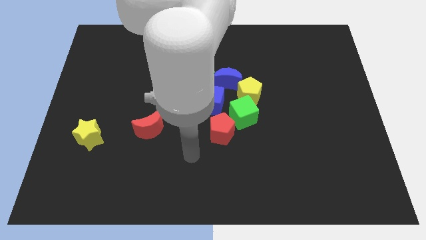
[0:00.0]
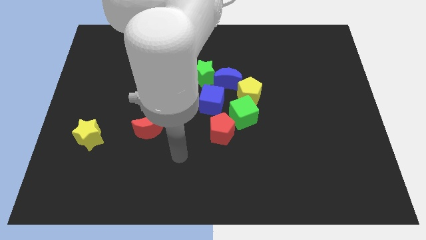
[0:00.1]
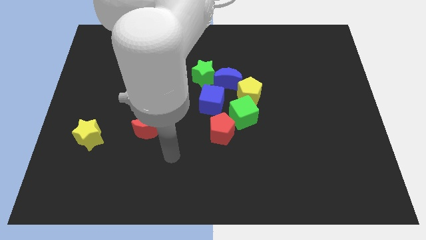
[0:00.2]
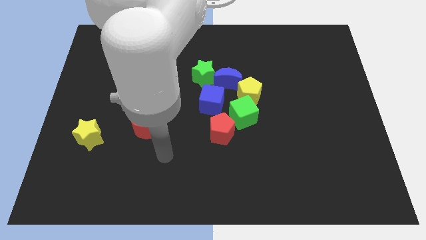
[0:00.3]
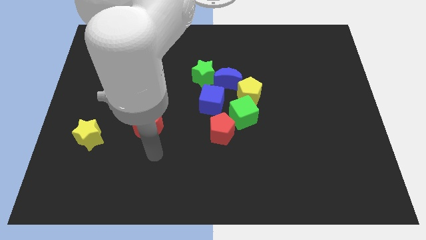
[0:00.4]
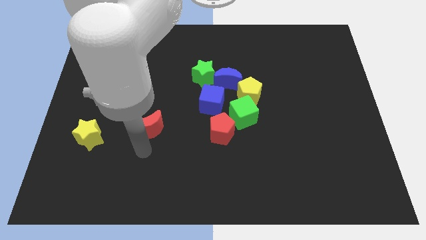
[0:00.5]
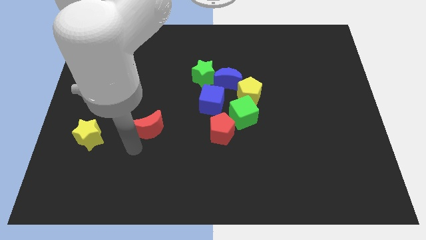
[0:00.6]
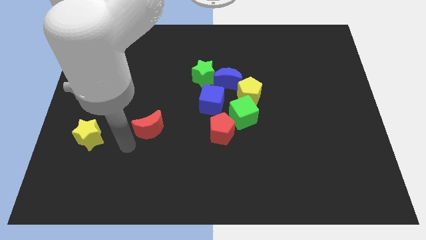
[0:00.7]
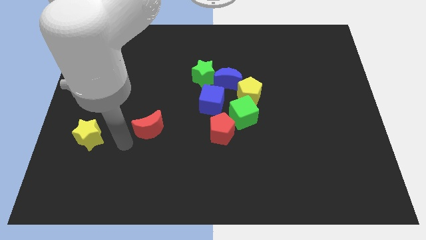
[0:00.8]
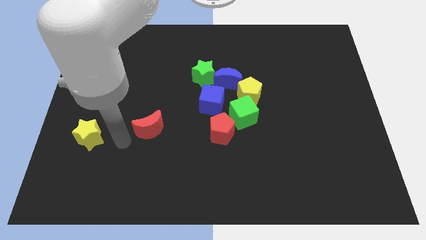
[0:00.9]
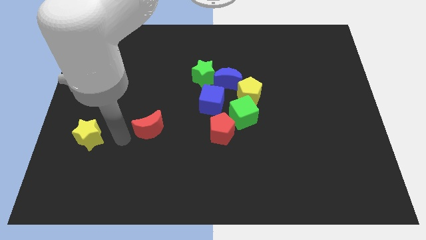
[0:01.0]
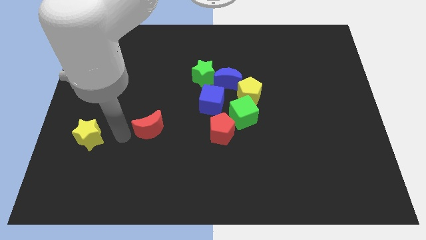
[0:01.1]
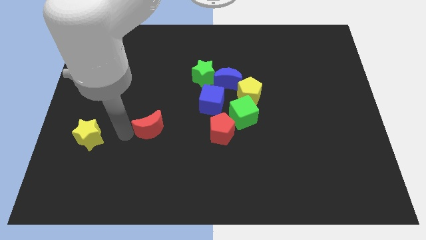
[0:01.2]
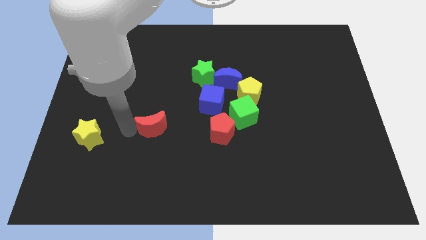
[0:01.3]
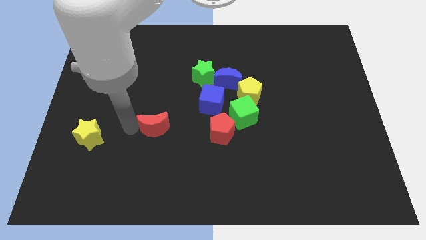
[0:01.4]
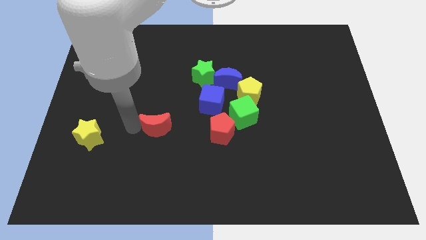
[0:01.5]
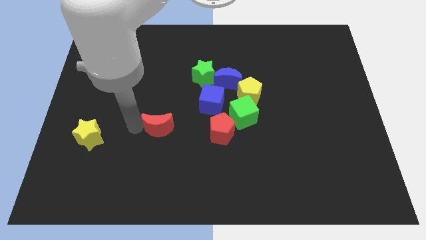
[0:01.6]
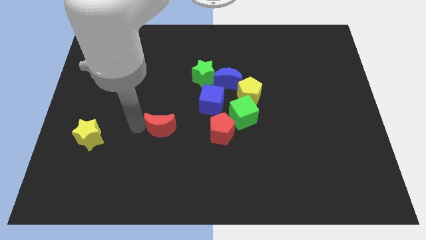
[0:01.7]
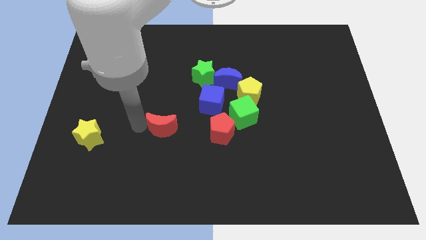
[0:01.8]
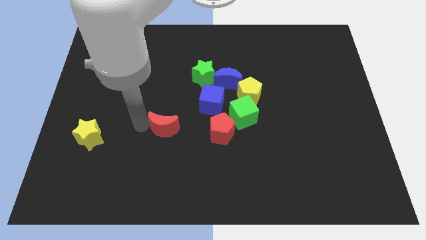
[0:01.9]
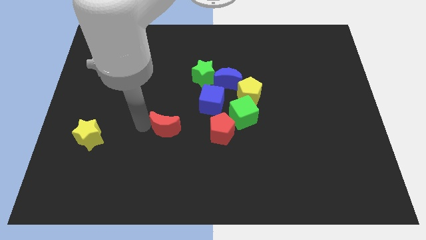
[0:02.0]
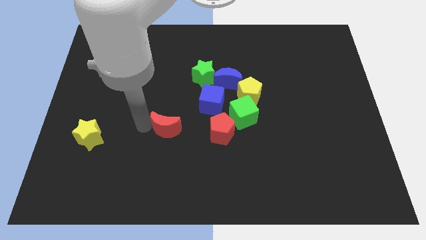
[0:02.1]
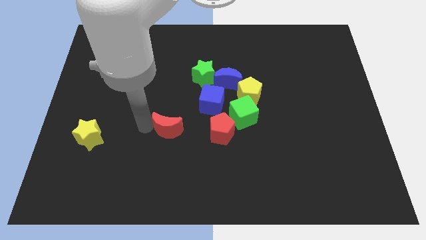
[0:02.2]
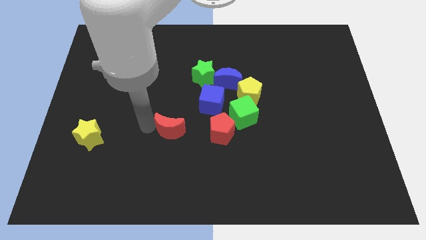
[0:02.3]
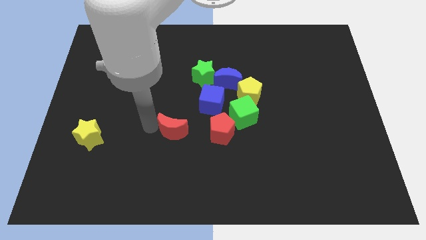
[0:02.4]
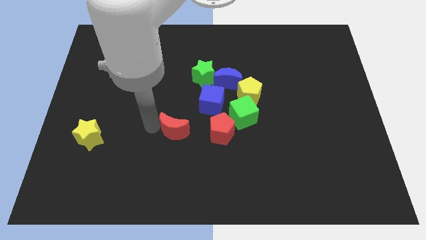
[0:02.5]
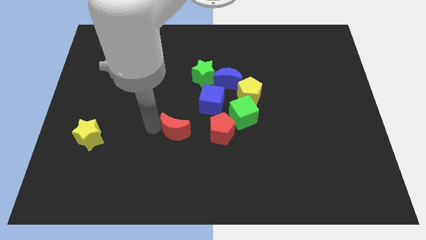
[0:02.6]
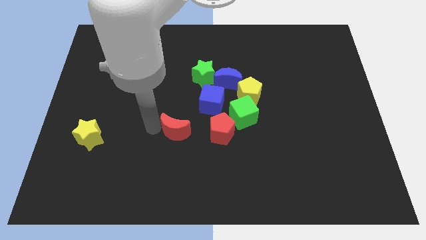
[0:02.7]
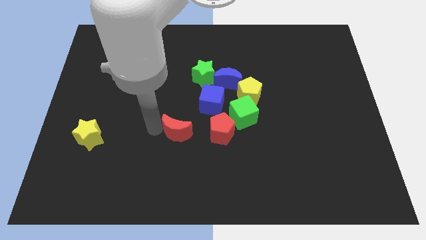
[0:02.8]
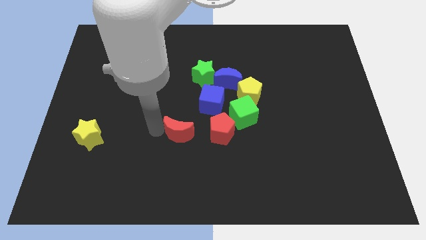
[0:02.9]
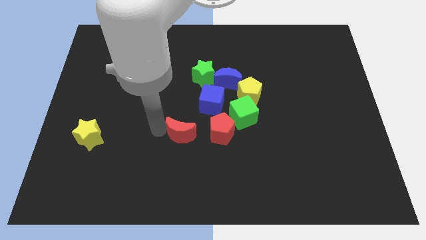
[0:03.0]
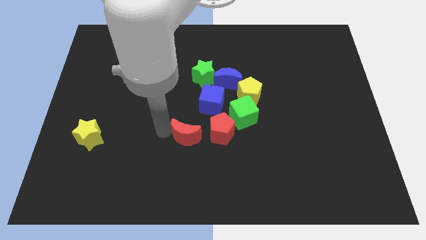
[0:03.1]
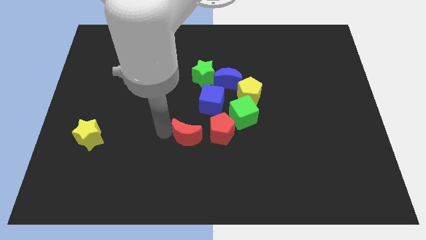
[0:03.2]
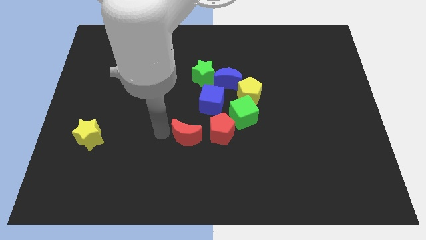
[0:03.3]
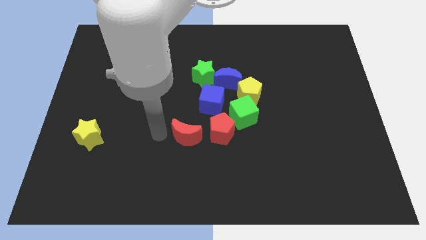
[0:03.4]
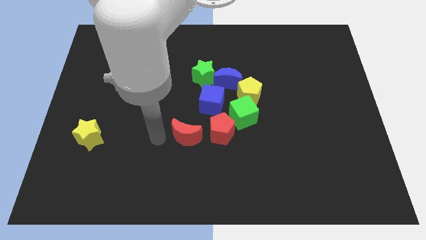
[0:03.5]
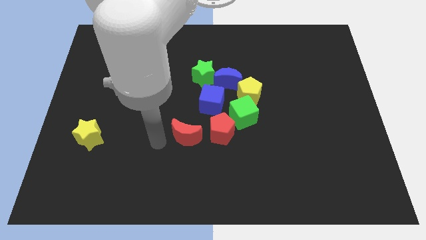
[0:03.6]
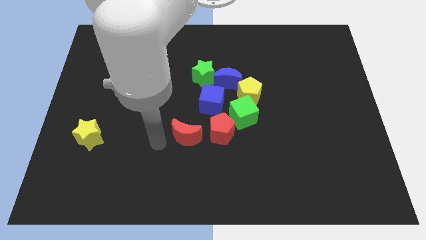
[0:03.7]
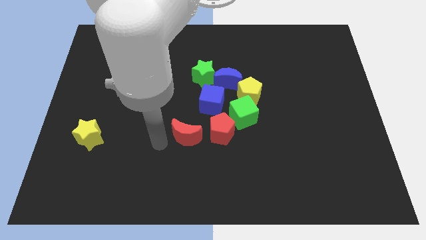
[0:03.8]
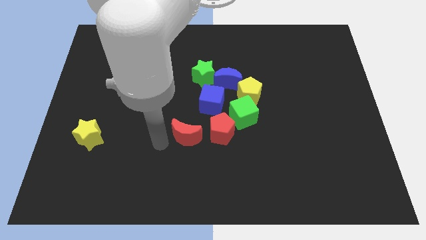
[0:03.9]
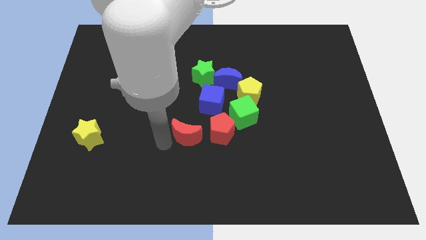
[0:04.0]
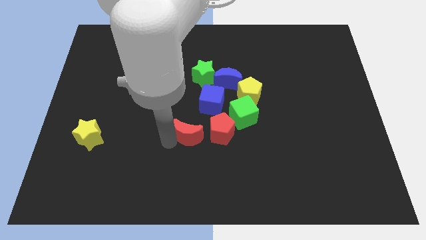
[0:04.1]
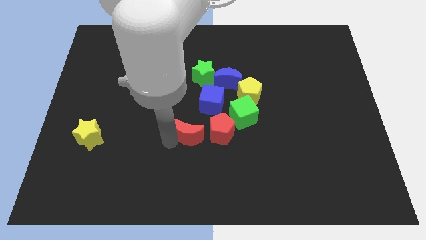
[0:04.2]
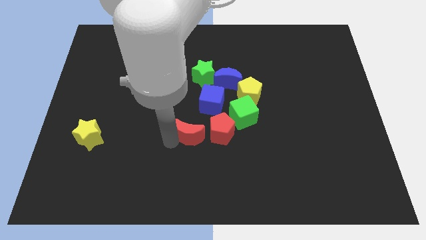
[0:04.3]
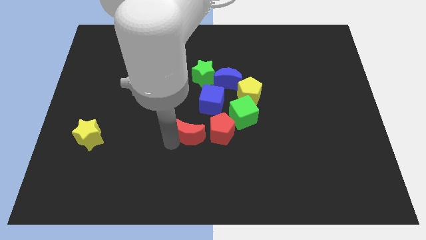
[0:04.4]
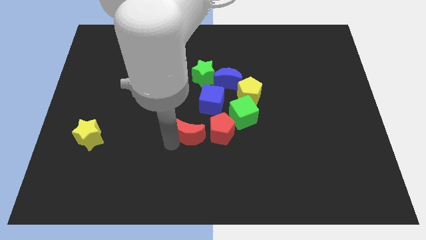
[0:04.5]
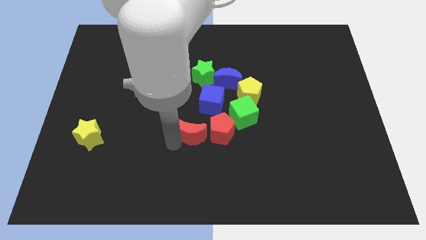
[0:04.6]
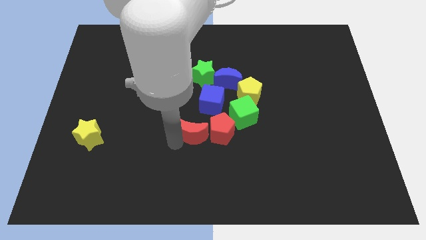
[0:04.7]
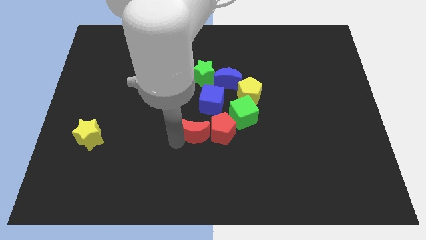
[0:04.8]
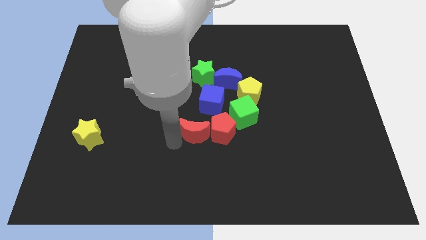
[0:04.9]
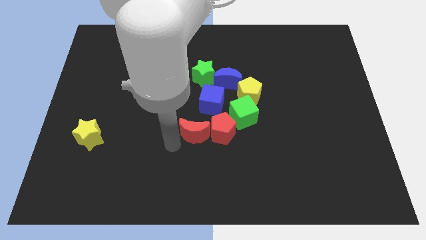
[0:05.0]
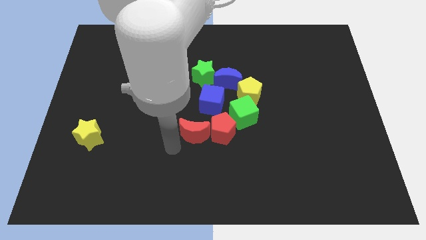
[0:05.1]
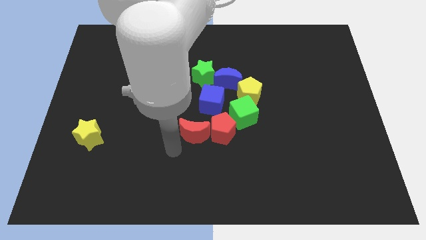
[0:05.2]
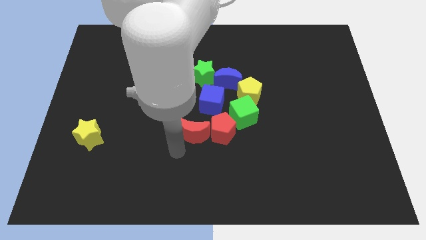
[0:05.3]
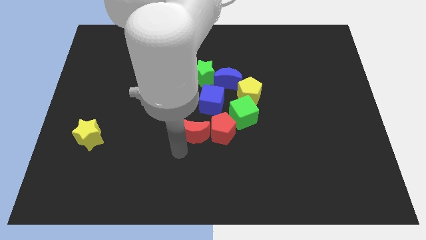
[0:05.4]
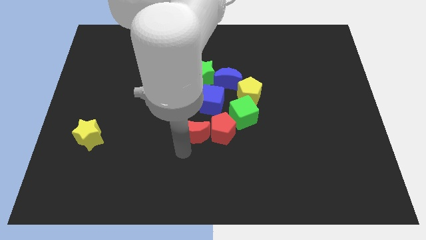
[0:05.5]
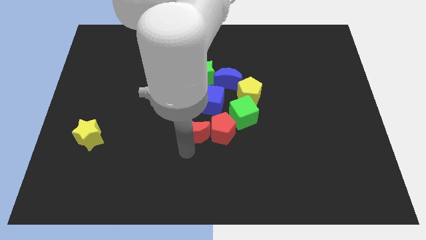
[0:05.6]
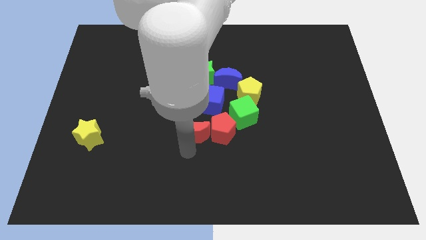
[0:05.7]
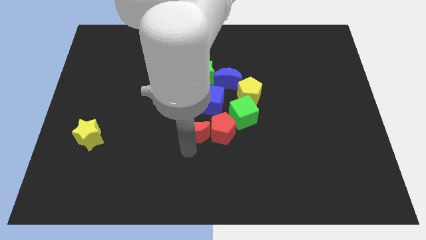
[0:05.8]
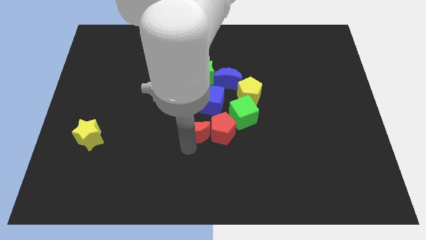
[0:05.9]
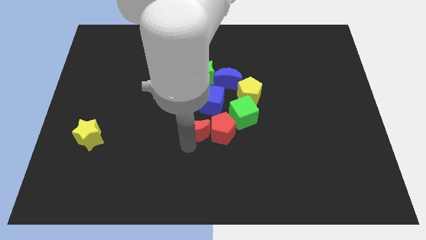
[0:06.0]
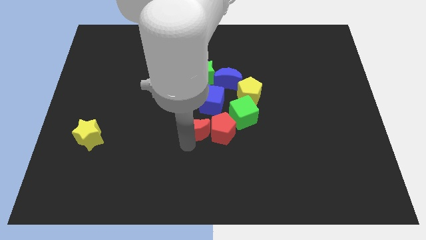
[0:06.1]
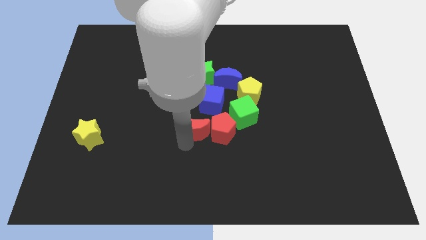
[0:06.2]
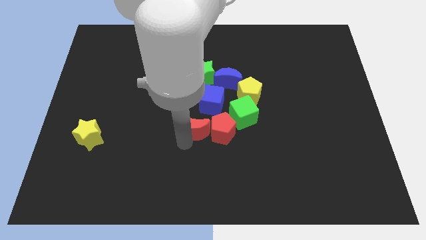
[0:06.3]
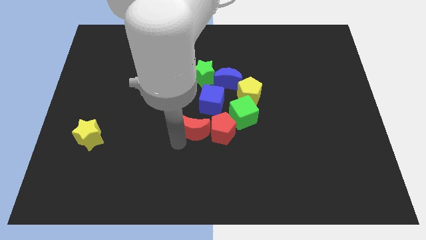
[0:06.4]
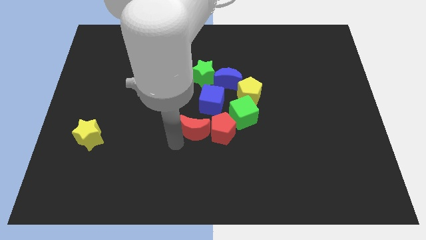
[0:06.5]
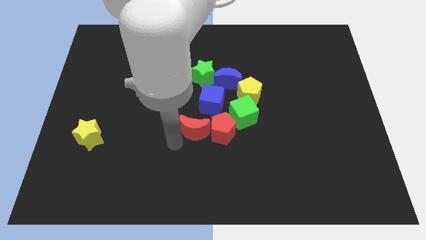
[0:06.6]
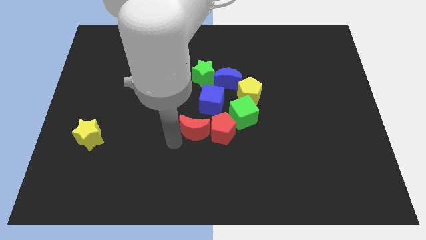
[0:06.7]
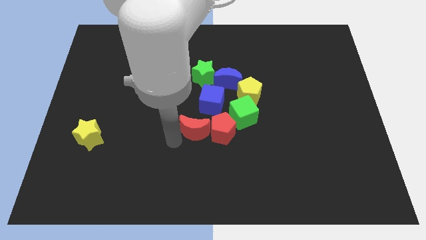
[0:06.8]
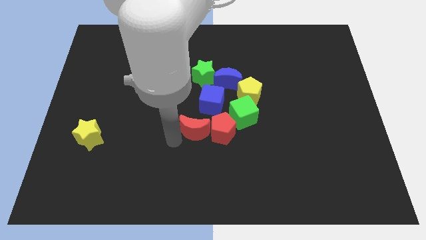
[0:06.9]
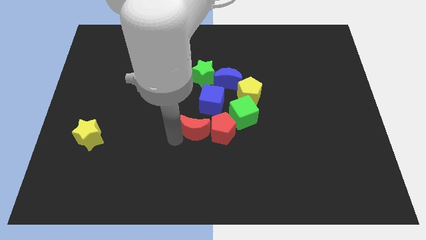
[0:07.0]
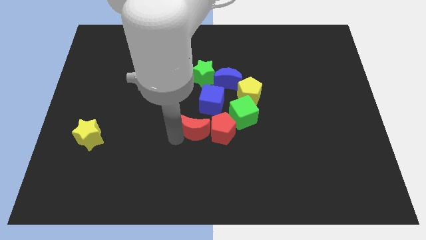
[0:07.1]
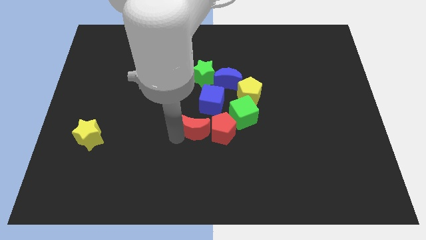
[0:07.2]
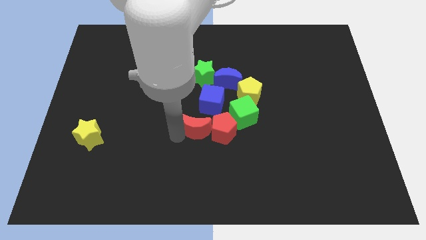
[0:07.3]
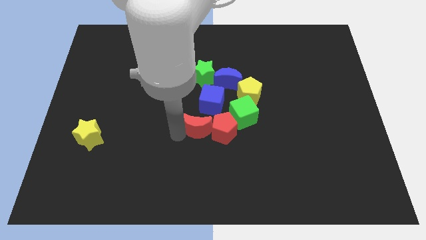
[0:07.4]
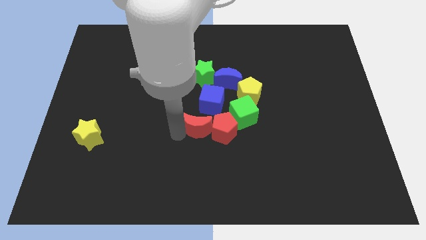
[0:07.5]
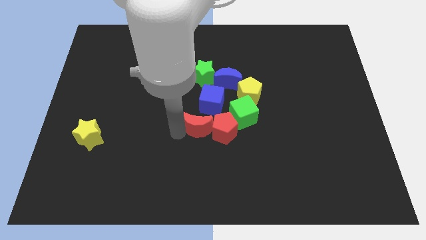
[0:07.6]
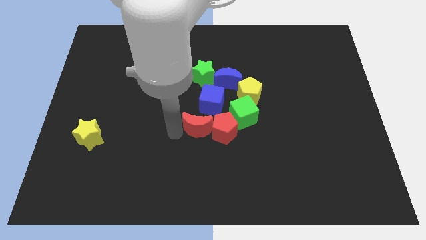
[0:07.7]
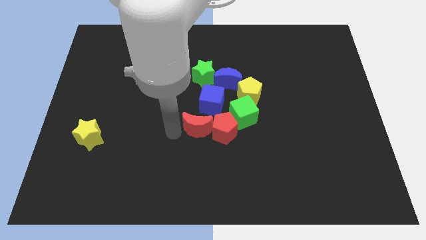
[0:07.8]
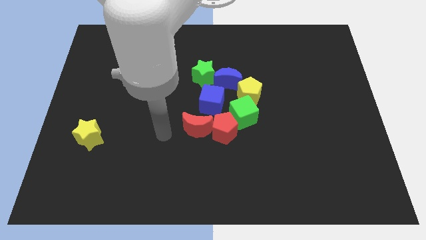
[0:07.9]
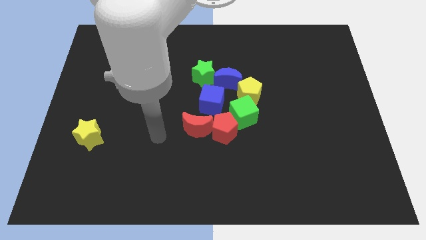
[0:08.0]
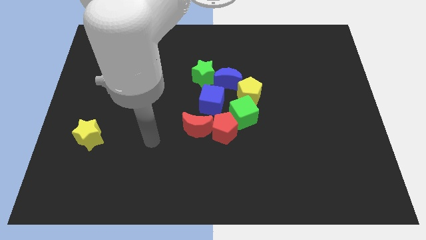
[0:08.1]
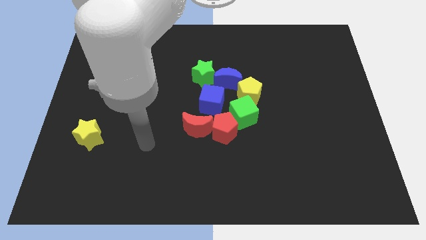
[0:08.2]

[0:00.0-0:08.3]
push the red crescent into the red pentagon

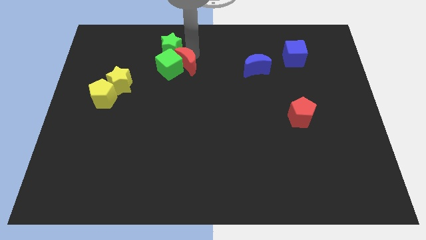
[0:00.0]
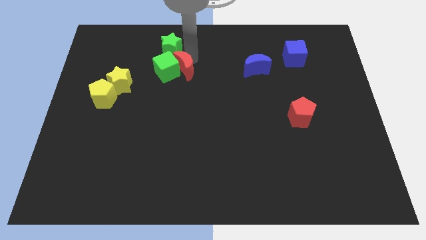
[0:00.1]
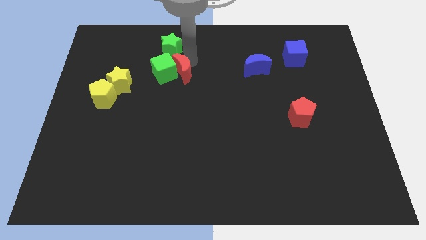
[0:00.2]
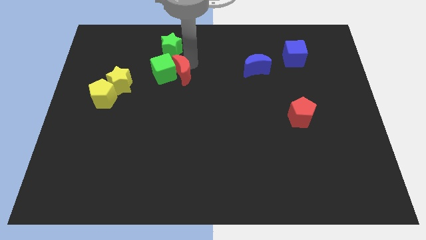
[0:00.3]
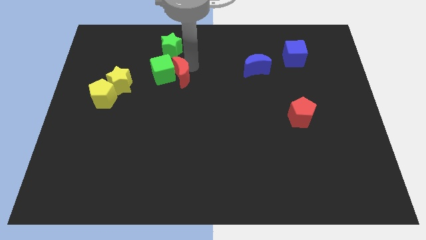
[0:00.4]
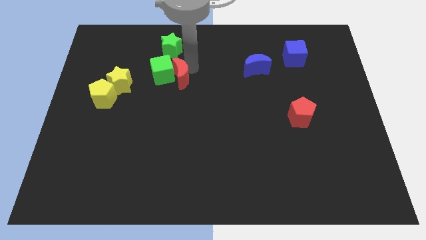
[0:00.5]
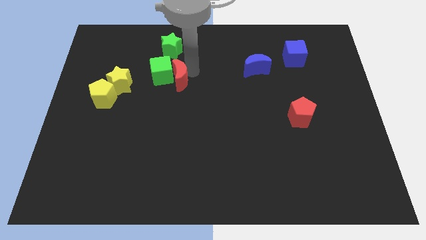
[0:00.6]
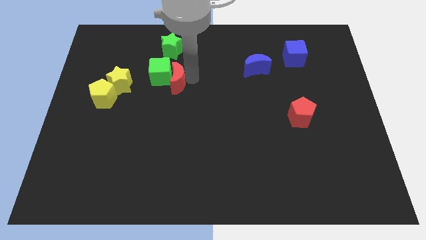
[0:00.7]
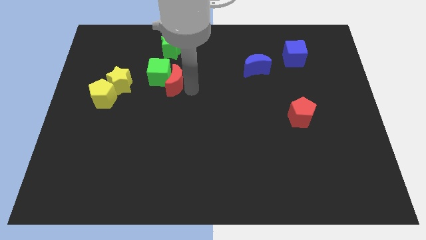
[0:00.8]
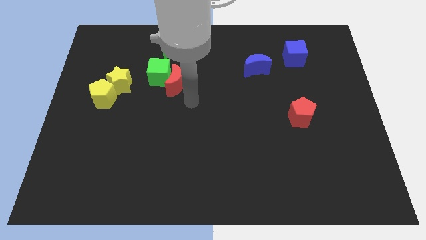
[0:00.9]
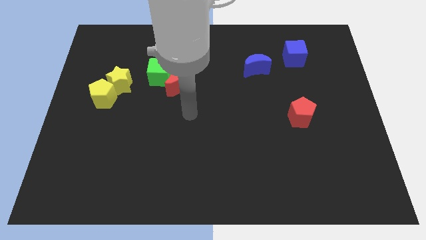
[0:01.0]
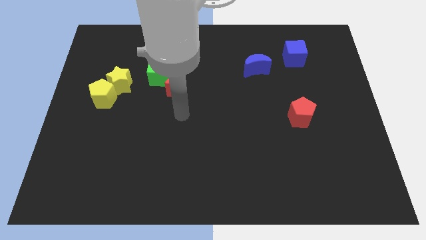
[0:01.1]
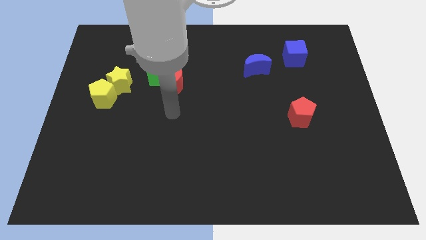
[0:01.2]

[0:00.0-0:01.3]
push the red moon into the green cube
